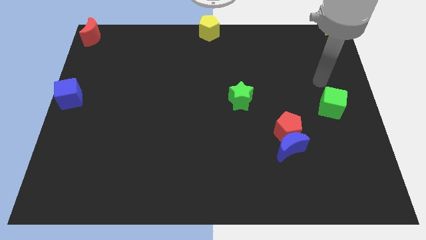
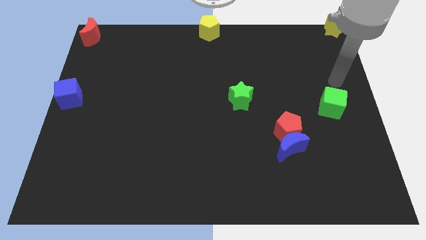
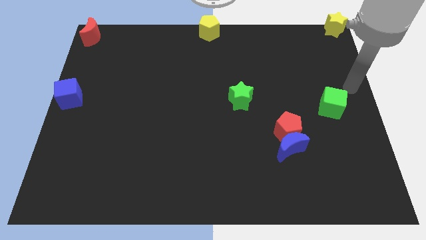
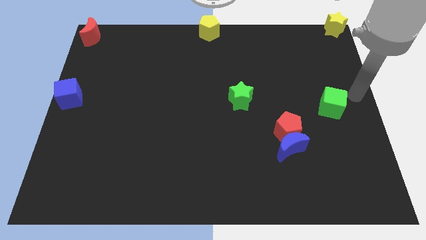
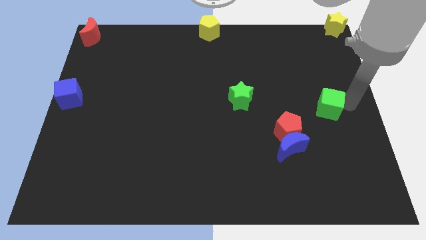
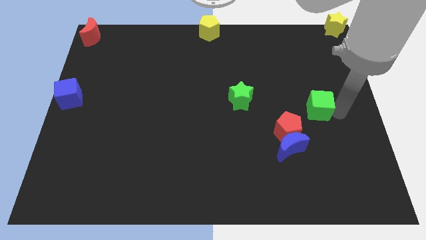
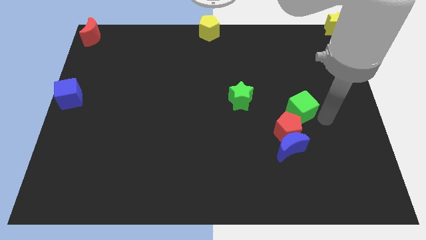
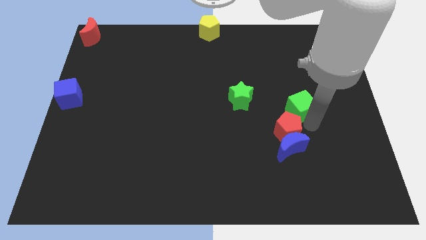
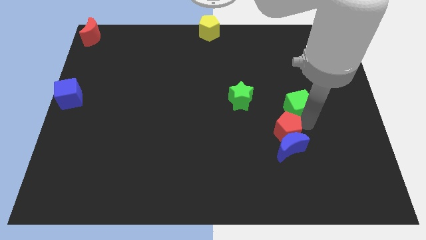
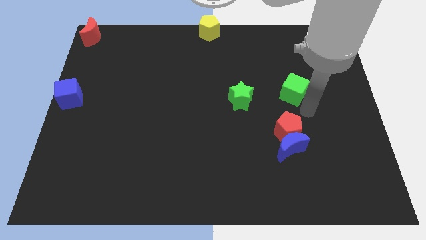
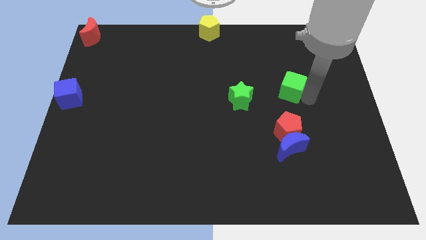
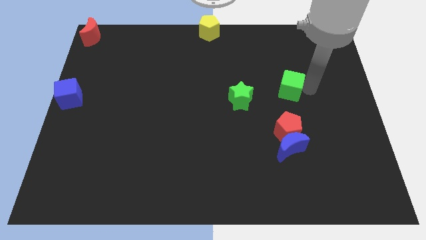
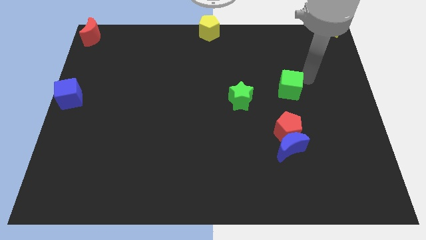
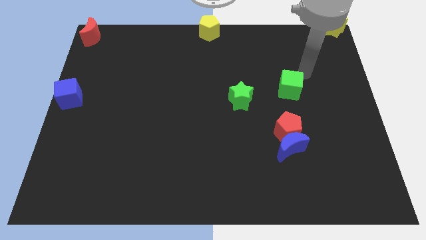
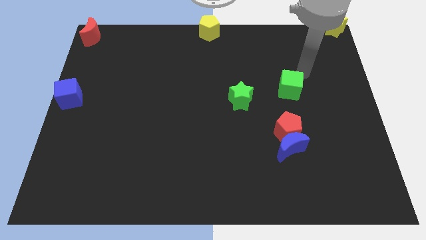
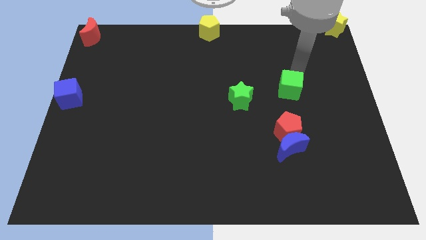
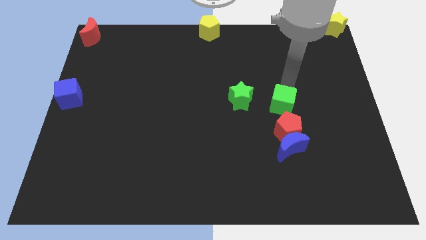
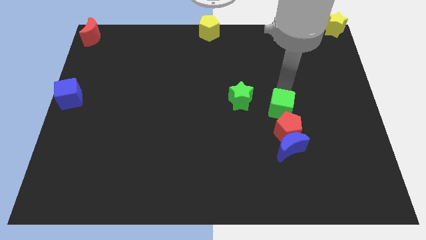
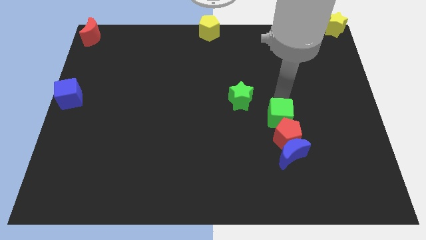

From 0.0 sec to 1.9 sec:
drag the green cube into the top side of the red pentagon

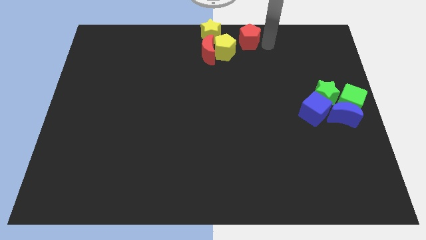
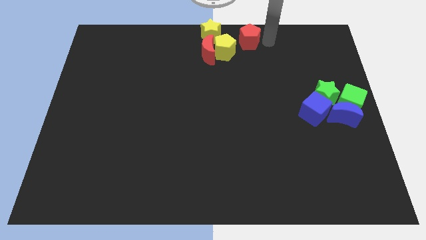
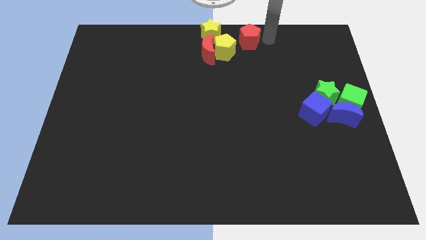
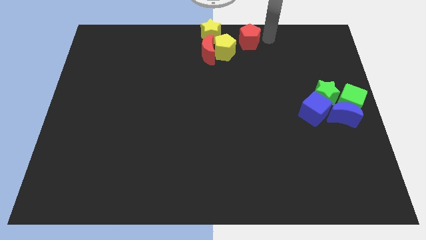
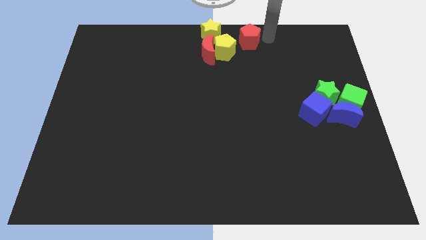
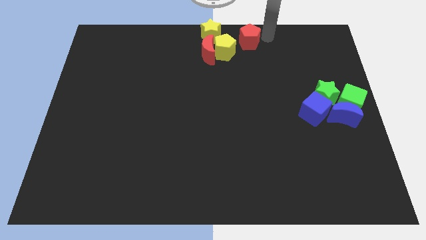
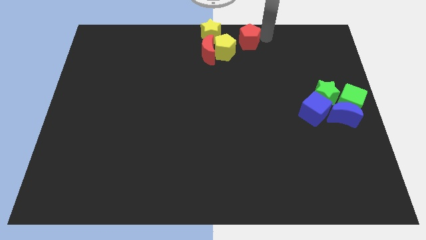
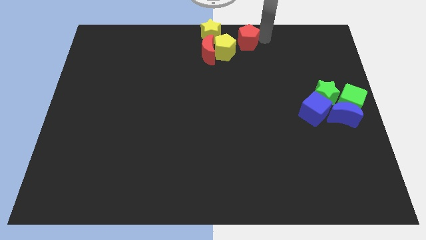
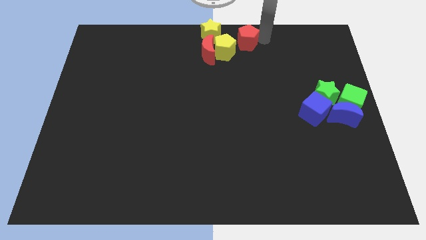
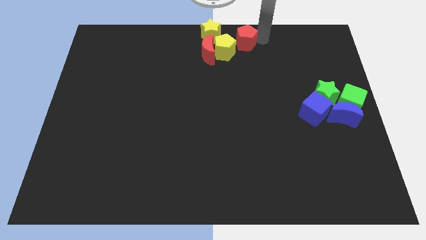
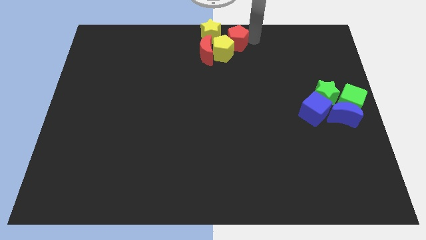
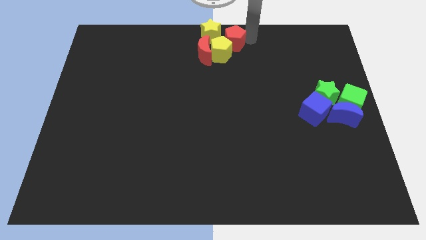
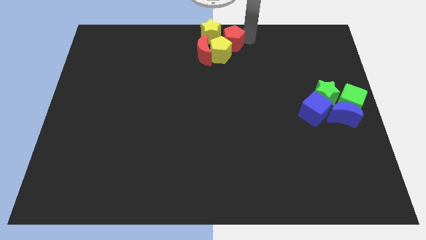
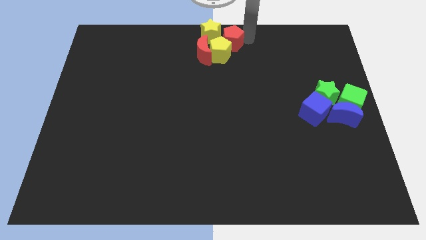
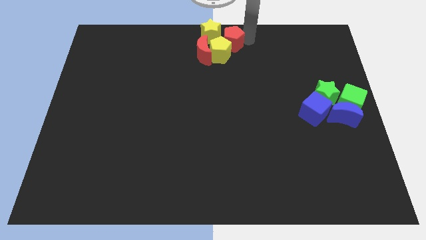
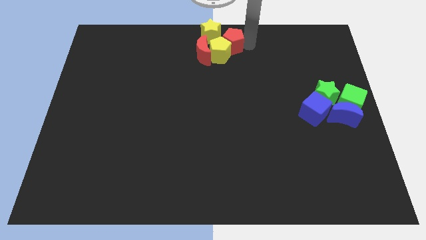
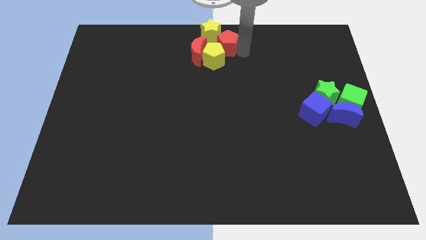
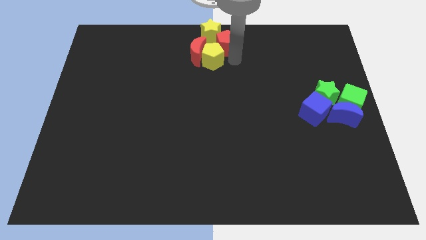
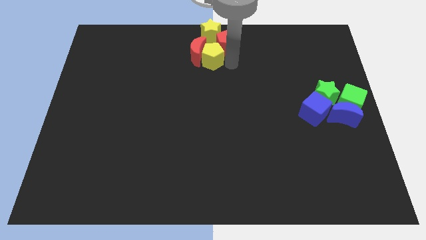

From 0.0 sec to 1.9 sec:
push the red pentagon into the yellow pentagon

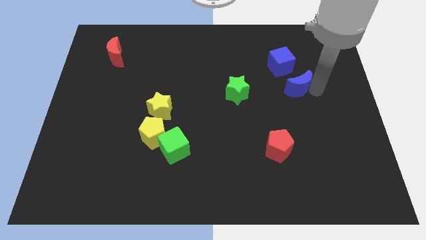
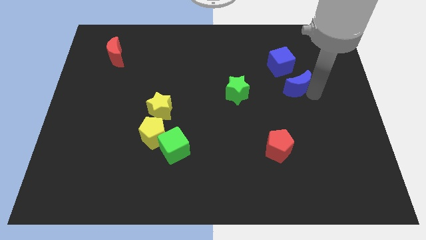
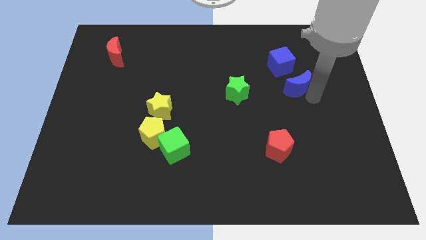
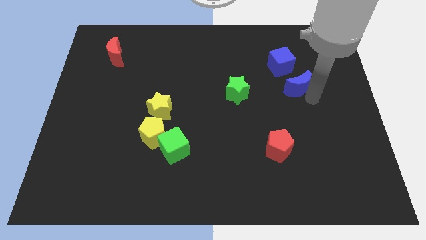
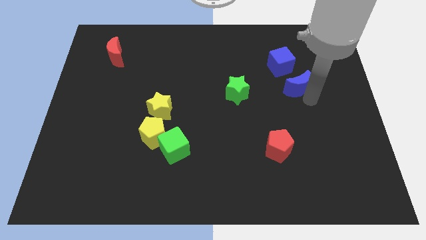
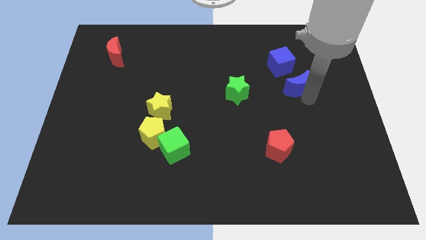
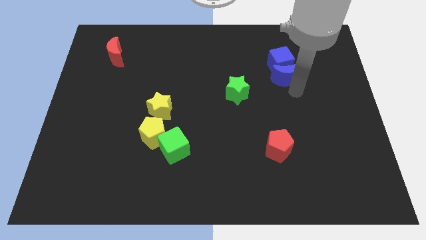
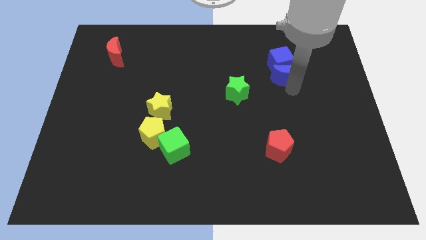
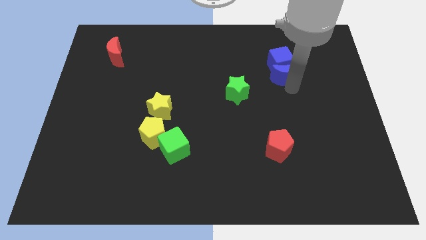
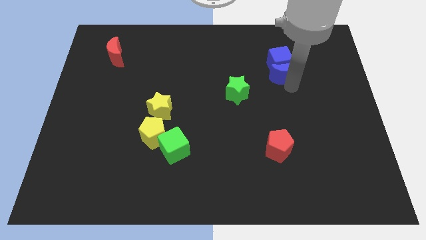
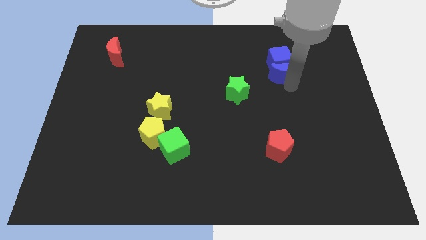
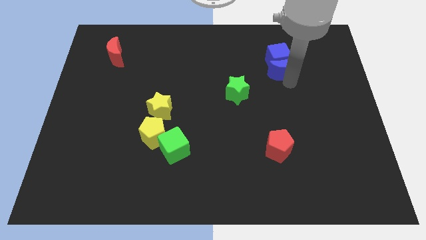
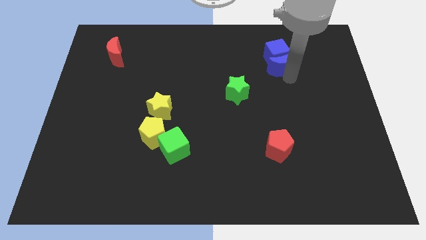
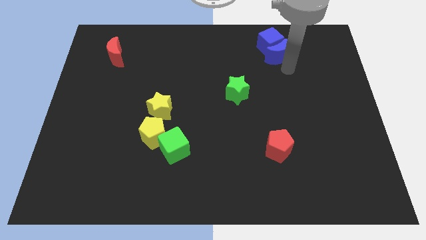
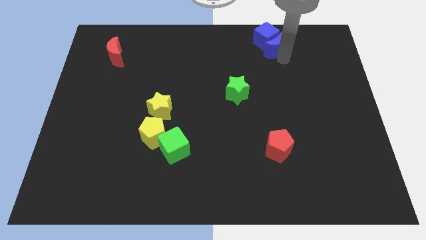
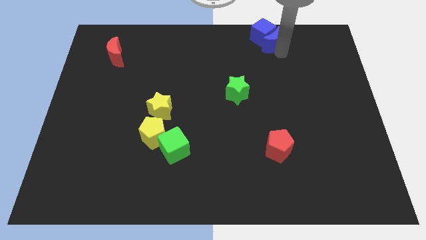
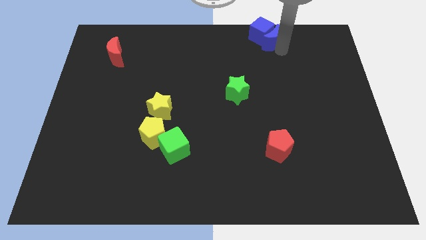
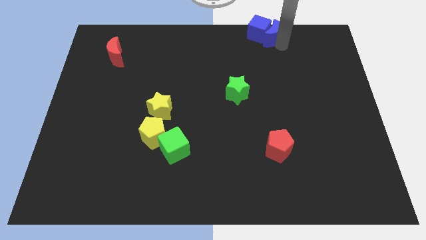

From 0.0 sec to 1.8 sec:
push blue cube along with blue moon to the top

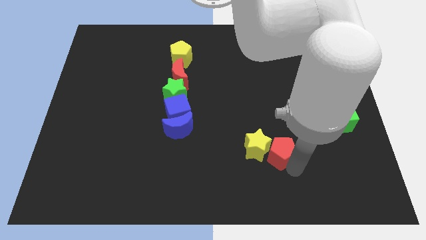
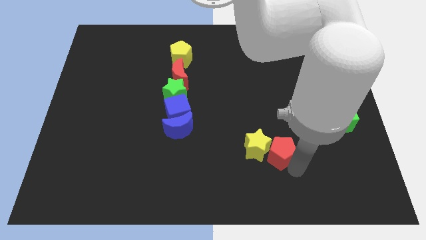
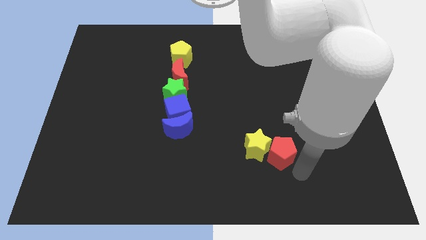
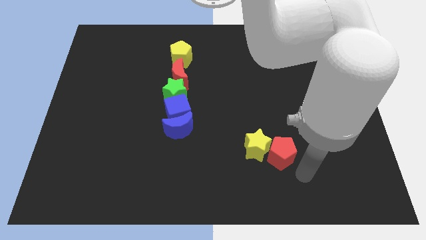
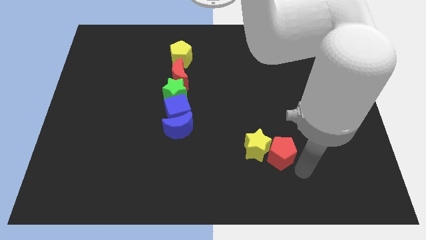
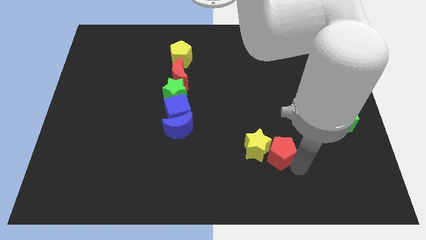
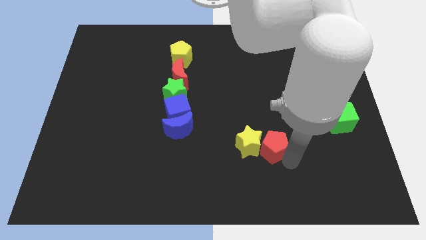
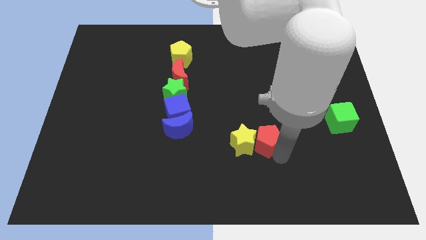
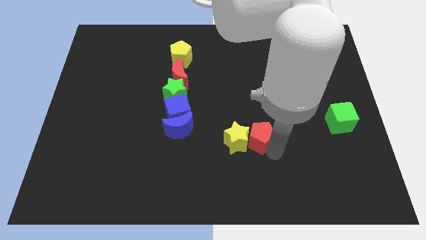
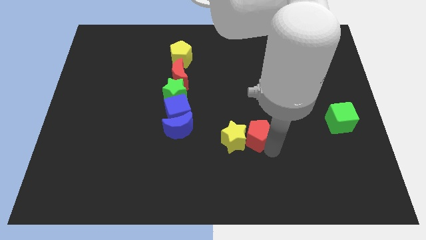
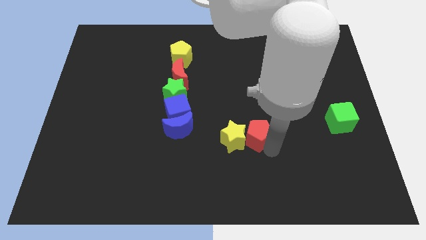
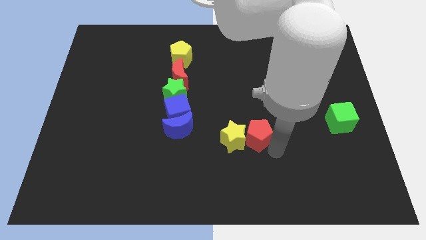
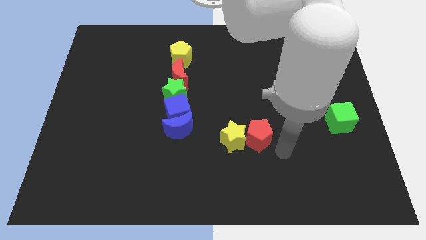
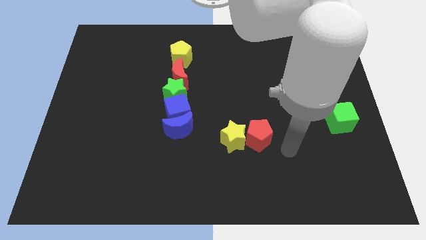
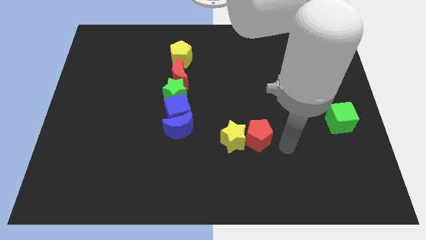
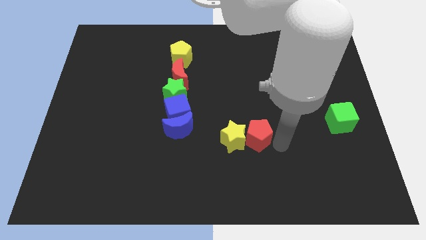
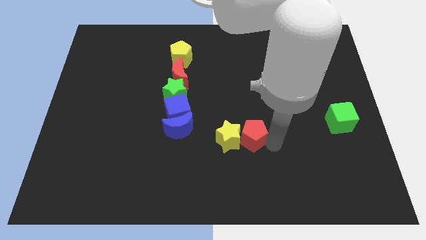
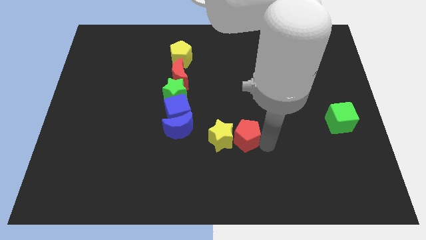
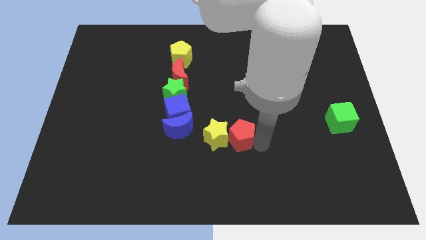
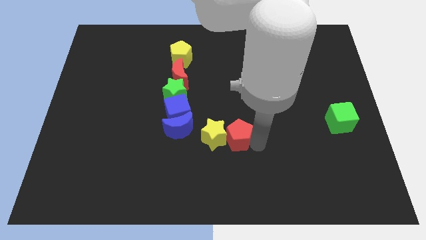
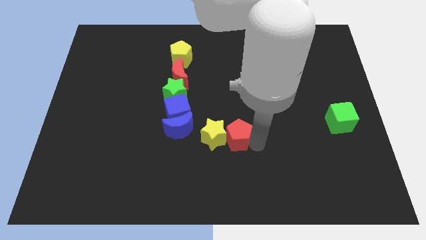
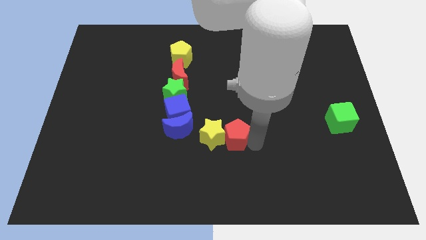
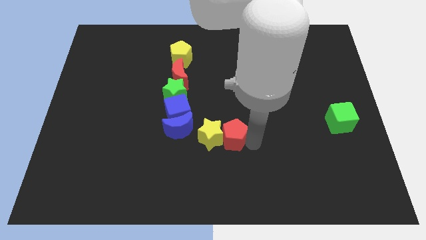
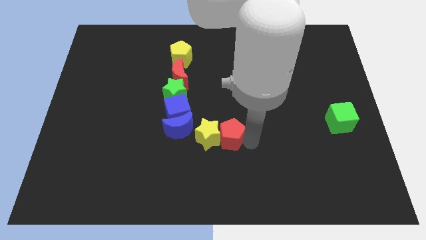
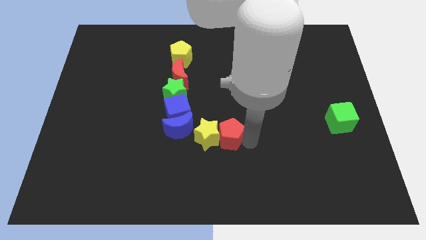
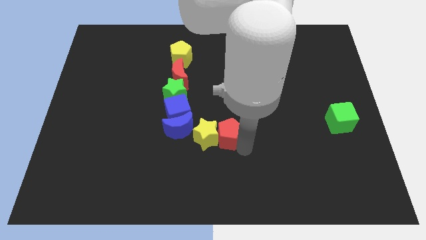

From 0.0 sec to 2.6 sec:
place the red pentagon and yellow star to the right of blue moon

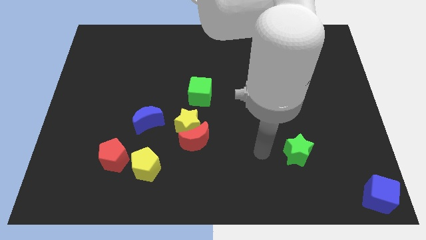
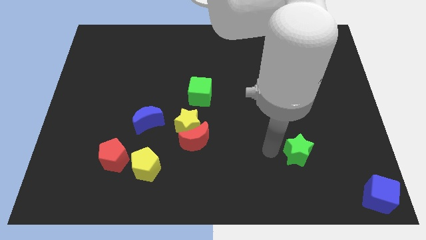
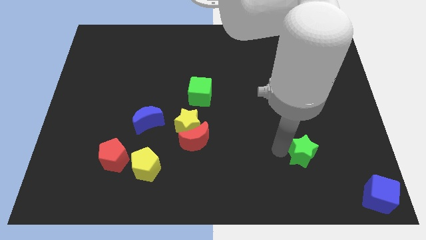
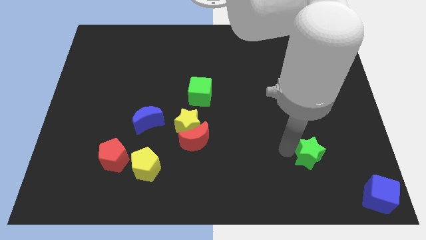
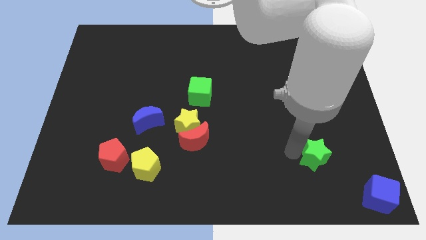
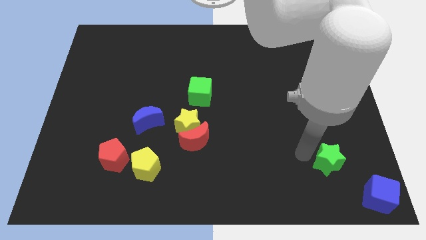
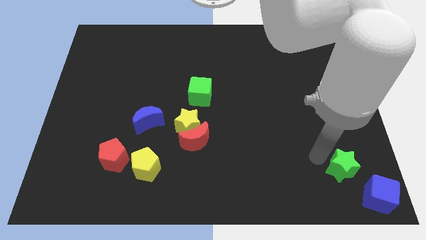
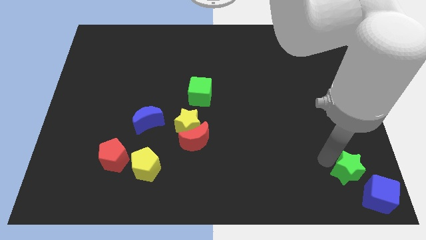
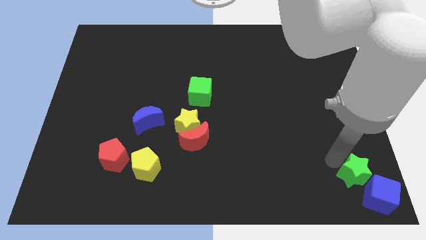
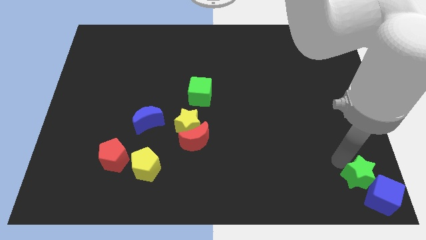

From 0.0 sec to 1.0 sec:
push green star towards blue block
